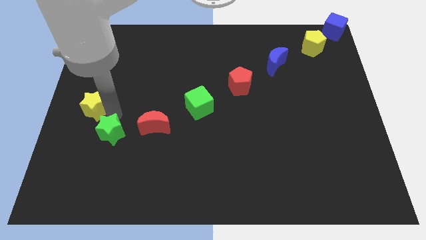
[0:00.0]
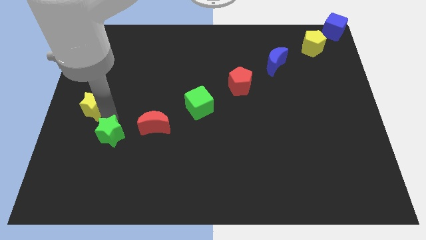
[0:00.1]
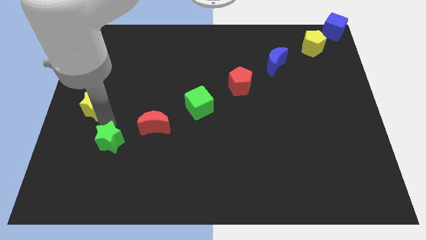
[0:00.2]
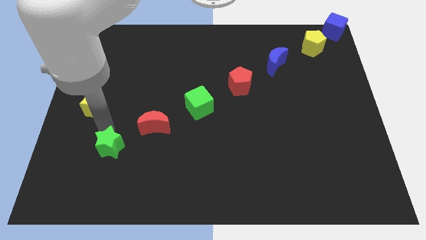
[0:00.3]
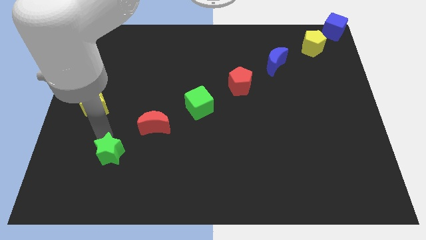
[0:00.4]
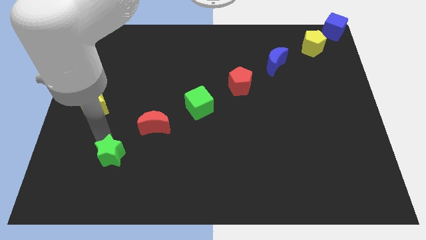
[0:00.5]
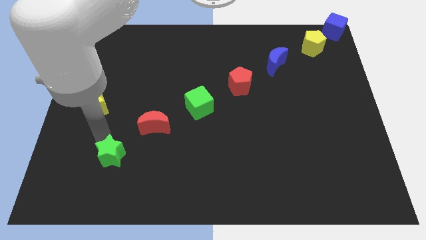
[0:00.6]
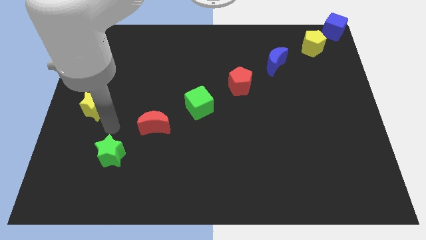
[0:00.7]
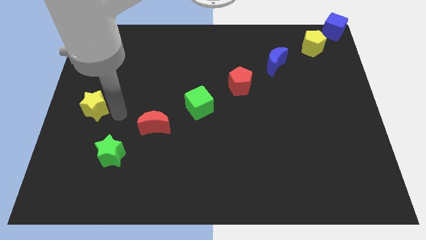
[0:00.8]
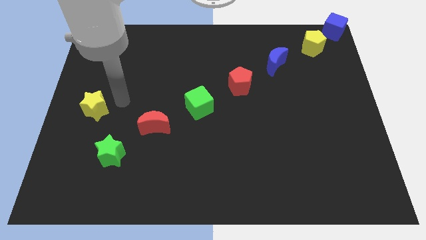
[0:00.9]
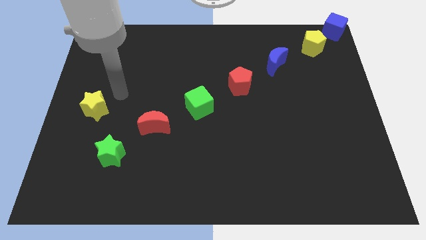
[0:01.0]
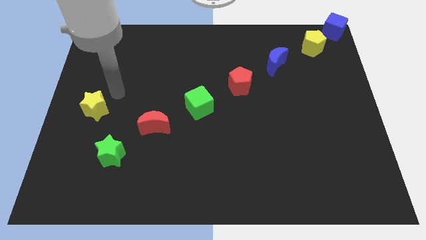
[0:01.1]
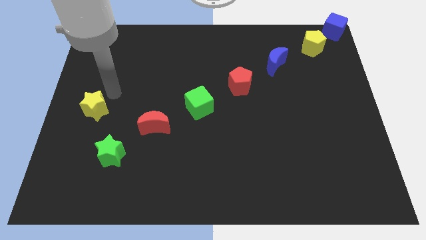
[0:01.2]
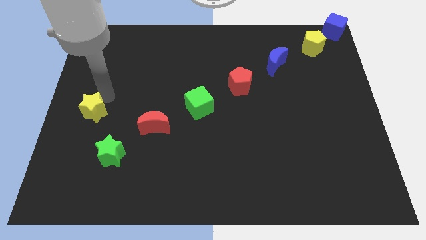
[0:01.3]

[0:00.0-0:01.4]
push the green star below the red crescent

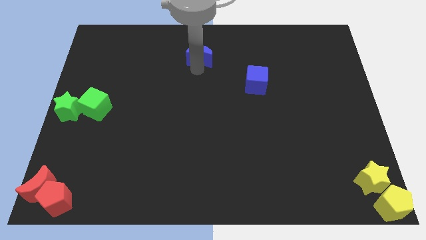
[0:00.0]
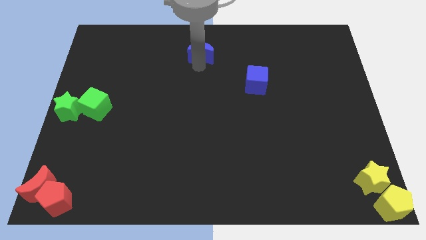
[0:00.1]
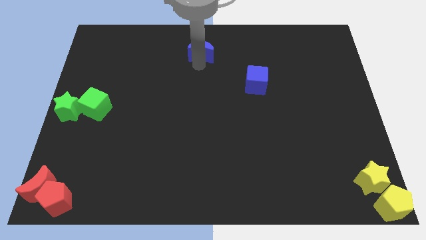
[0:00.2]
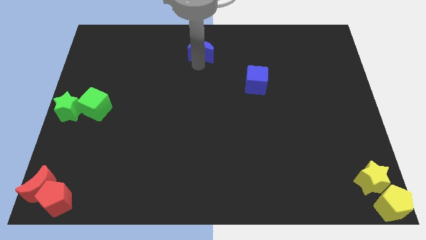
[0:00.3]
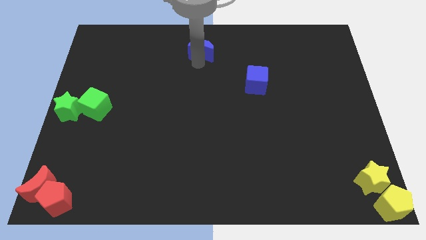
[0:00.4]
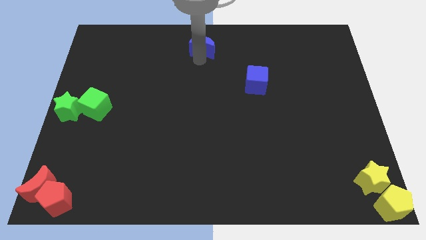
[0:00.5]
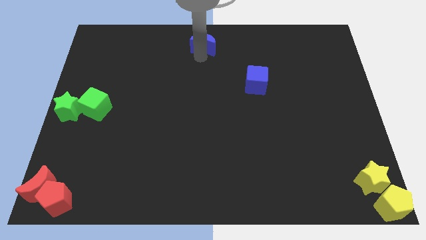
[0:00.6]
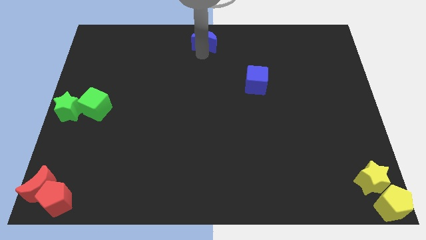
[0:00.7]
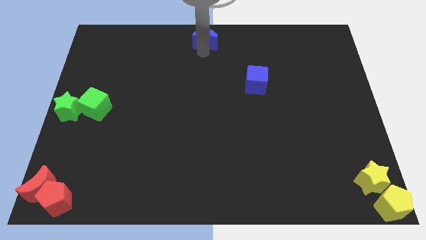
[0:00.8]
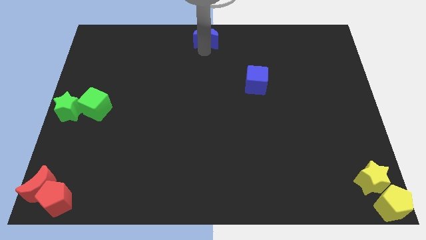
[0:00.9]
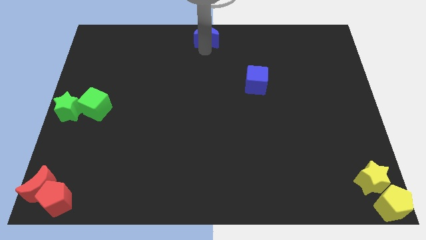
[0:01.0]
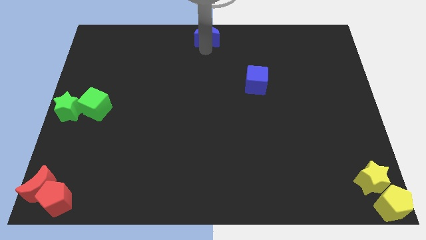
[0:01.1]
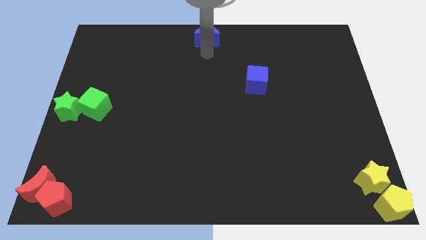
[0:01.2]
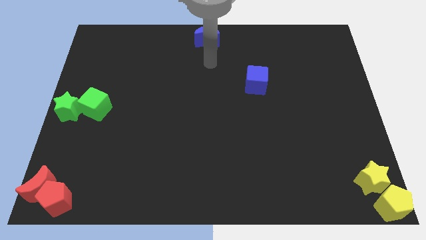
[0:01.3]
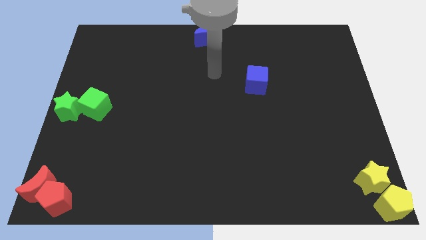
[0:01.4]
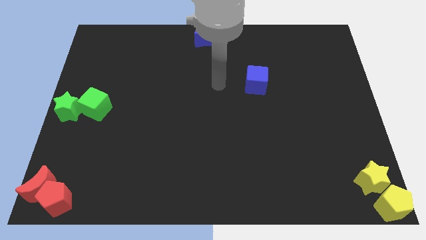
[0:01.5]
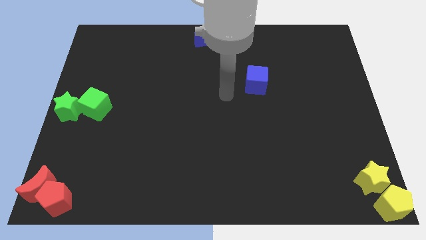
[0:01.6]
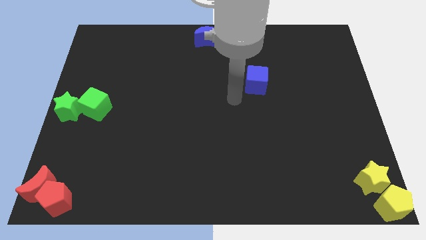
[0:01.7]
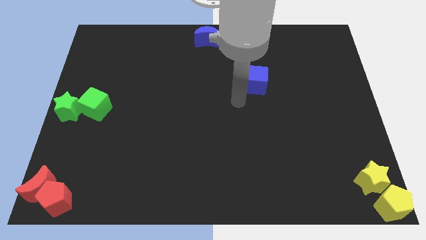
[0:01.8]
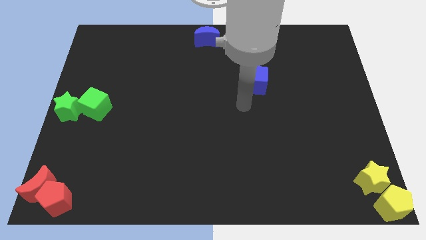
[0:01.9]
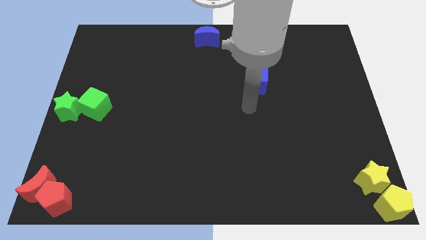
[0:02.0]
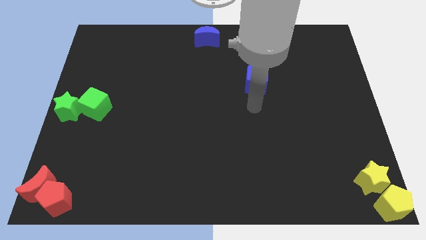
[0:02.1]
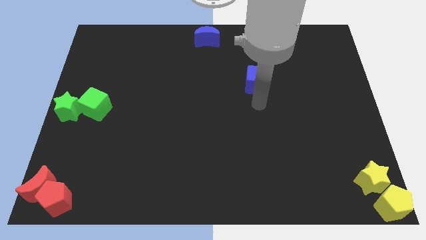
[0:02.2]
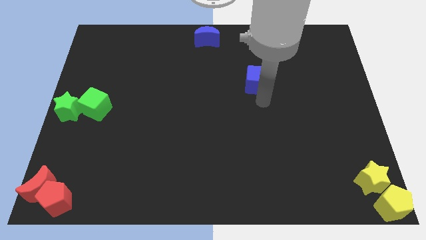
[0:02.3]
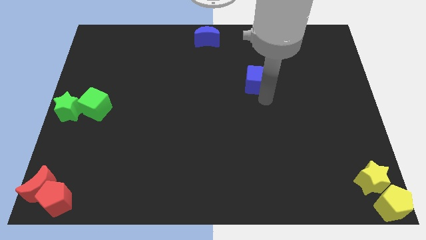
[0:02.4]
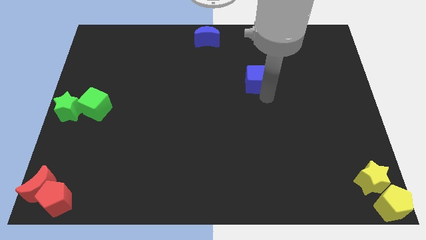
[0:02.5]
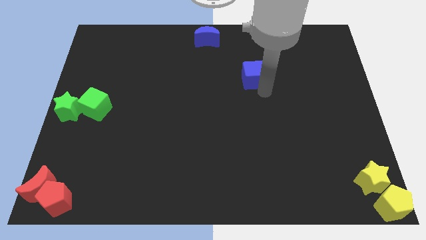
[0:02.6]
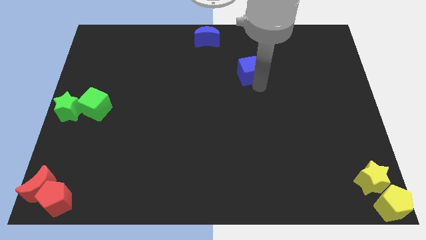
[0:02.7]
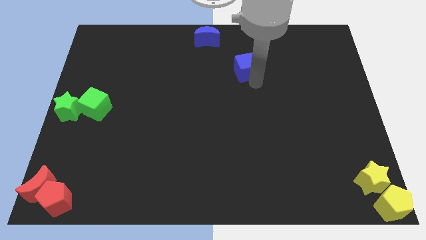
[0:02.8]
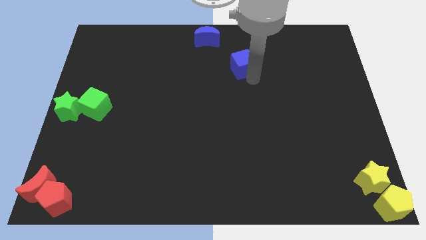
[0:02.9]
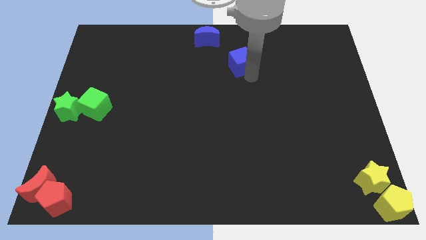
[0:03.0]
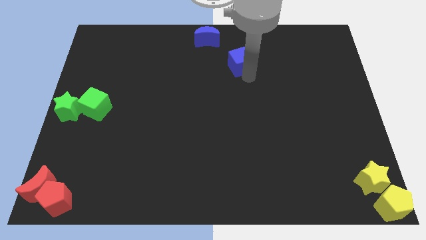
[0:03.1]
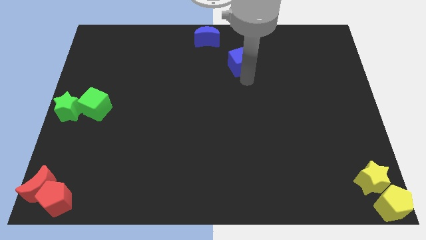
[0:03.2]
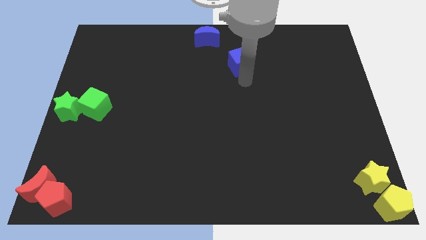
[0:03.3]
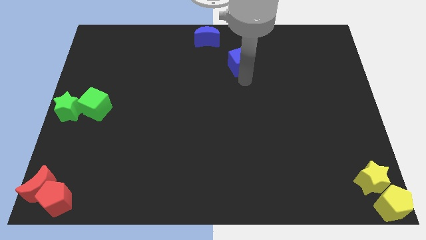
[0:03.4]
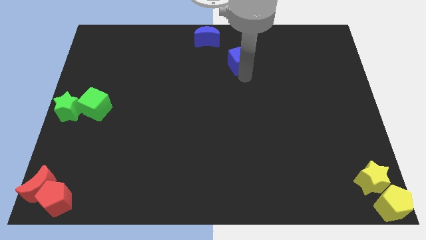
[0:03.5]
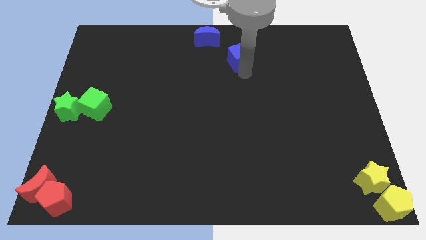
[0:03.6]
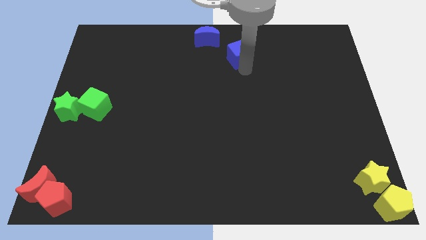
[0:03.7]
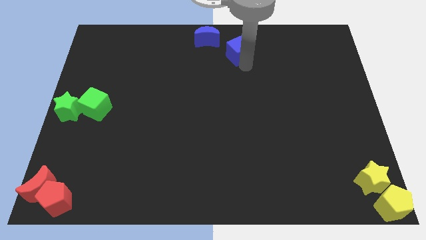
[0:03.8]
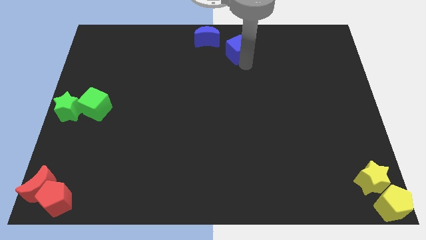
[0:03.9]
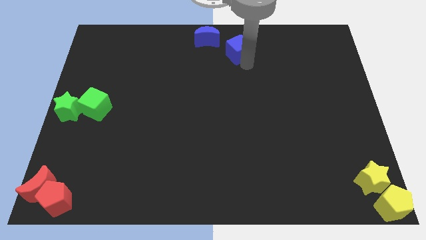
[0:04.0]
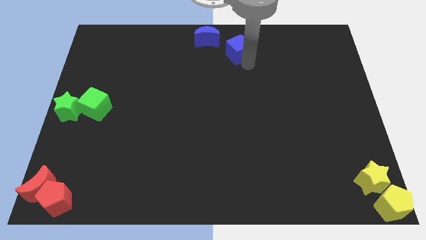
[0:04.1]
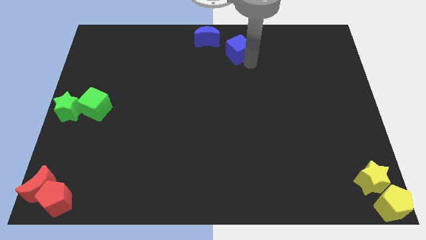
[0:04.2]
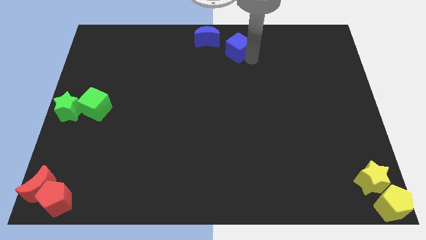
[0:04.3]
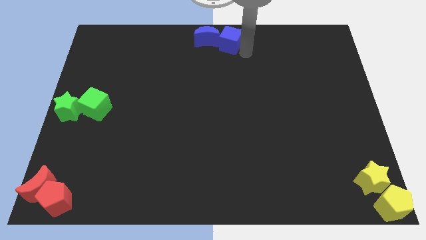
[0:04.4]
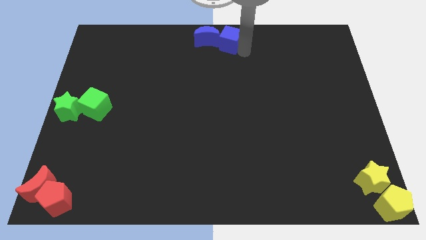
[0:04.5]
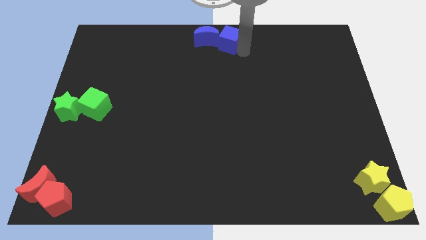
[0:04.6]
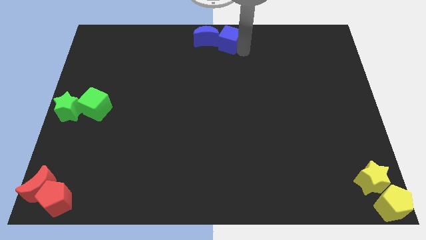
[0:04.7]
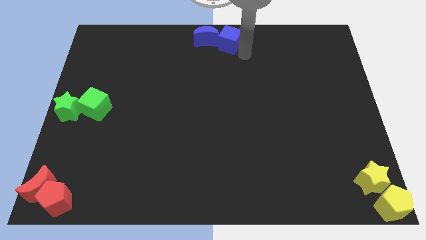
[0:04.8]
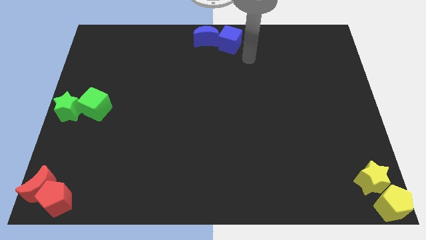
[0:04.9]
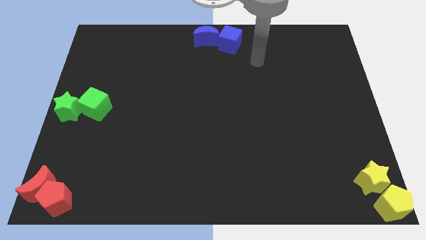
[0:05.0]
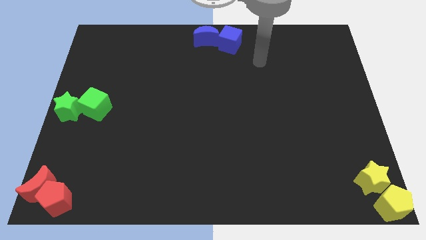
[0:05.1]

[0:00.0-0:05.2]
move the blue blocks to the top center of the board

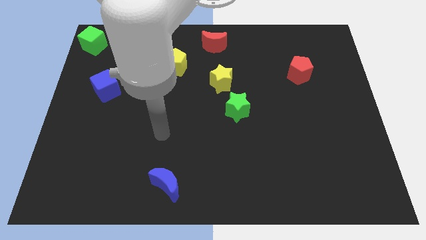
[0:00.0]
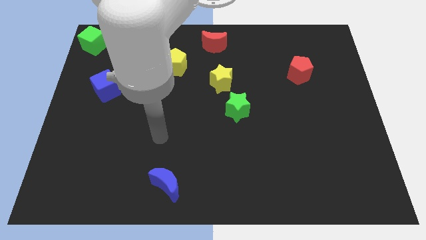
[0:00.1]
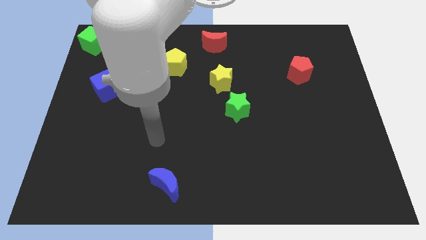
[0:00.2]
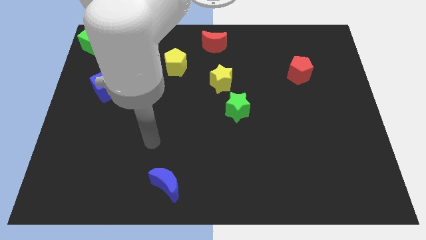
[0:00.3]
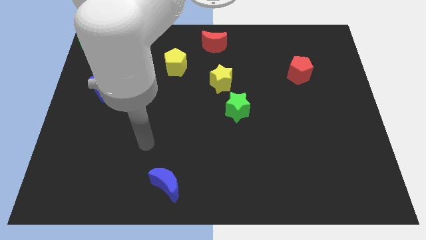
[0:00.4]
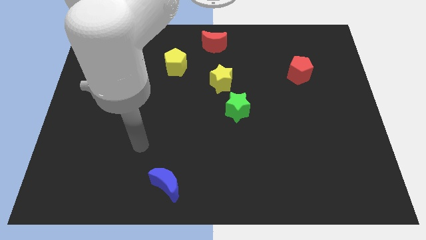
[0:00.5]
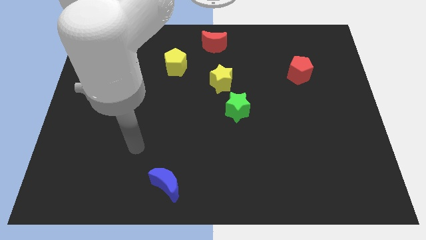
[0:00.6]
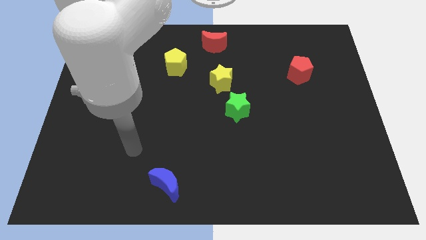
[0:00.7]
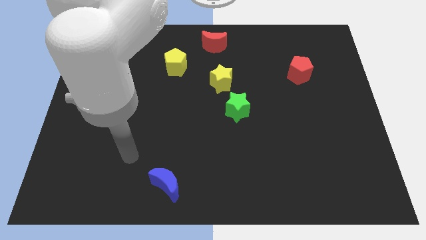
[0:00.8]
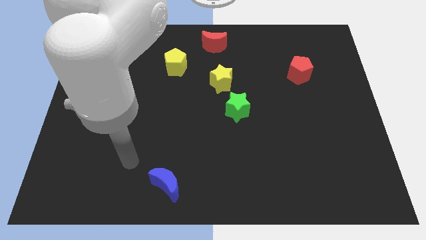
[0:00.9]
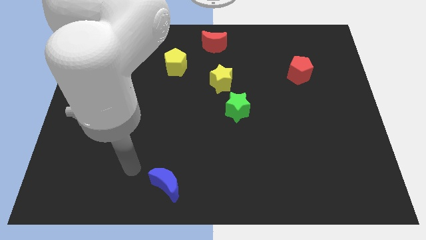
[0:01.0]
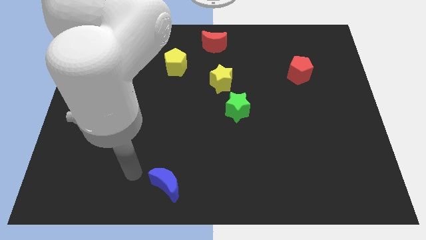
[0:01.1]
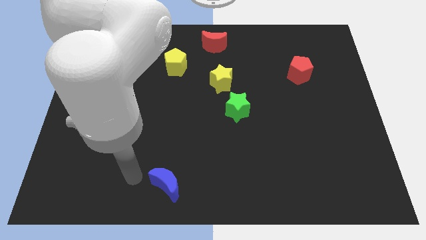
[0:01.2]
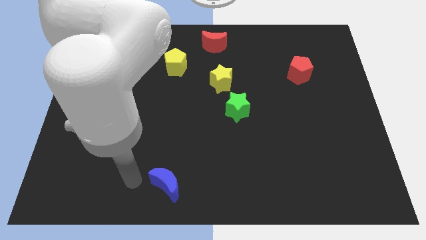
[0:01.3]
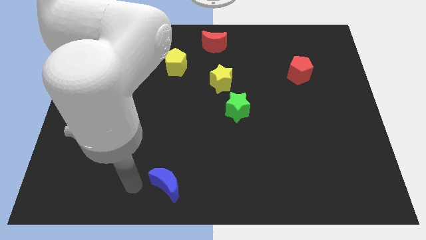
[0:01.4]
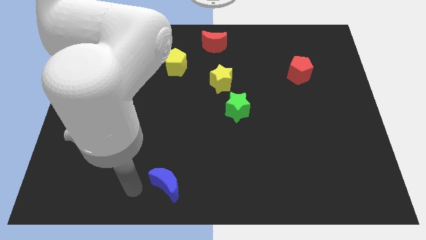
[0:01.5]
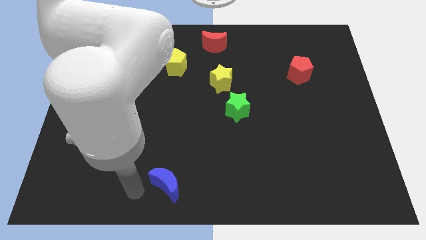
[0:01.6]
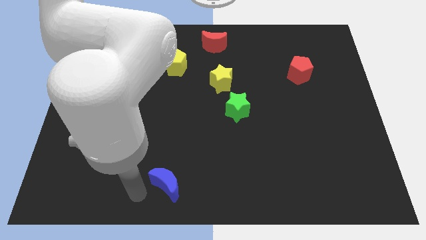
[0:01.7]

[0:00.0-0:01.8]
move the arm towards the blue moon

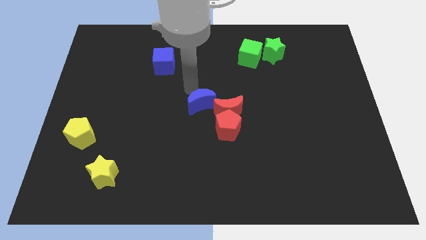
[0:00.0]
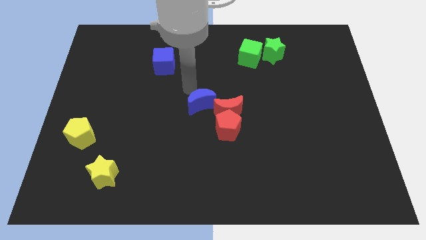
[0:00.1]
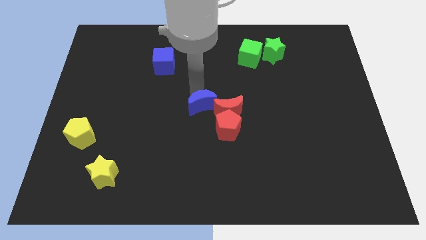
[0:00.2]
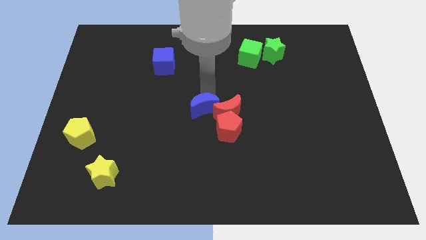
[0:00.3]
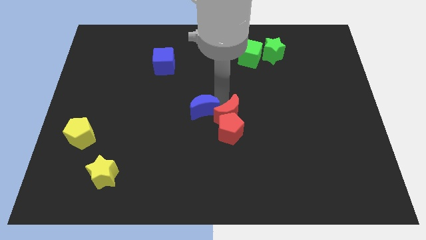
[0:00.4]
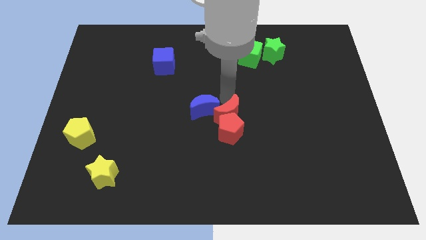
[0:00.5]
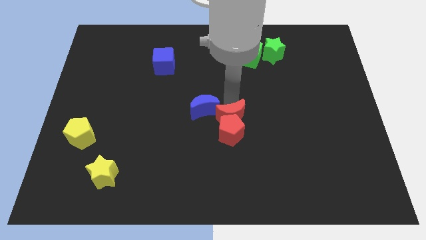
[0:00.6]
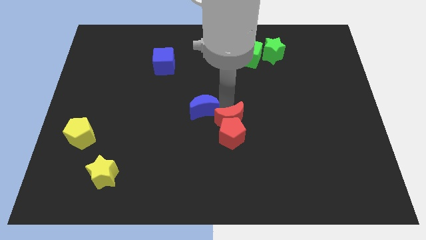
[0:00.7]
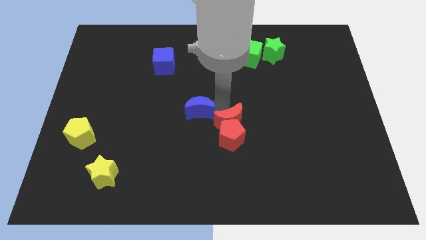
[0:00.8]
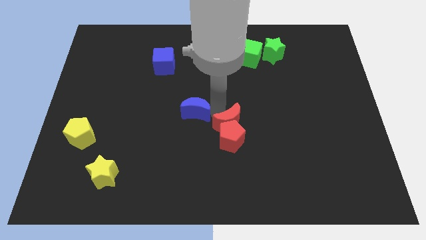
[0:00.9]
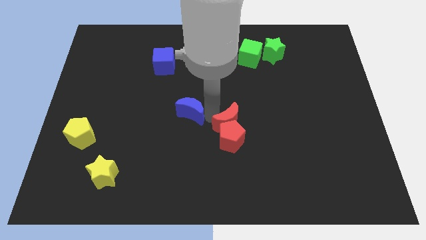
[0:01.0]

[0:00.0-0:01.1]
place your hand in between blue and red moons
